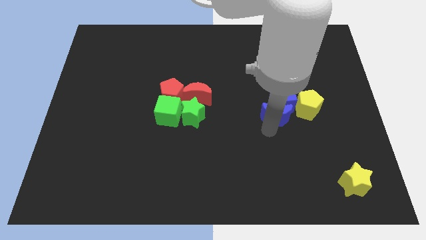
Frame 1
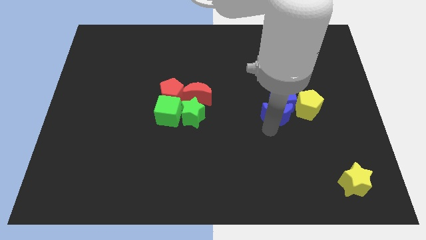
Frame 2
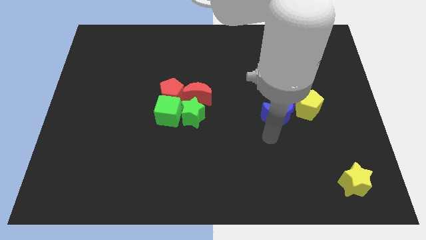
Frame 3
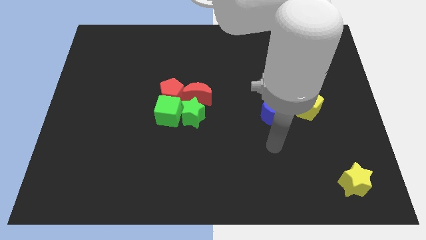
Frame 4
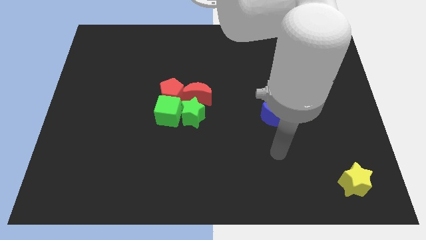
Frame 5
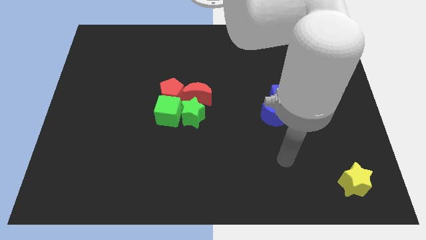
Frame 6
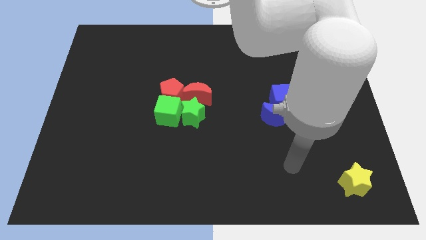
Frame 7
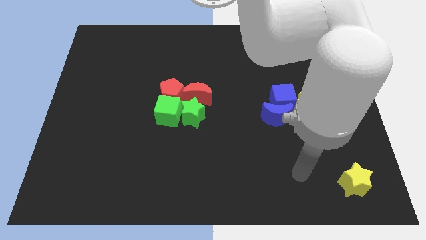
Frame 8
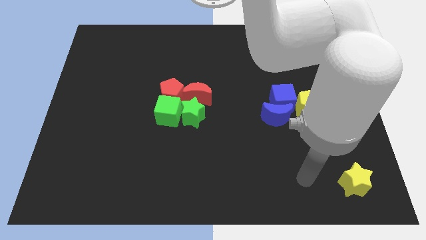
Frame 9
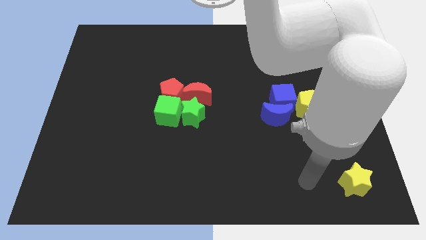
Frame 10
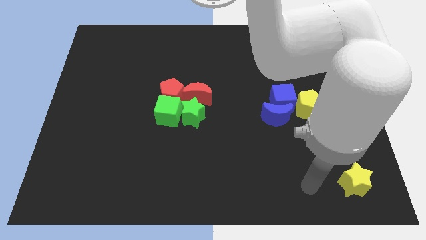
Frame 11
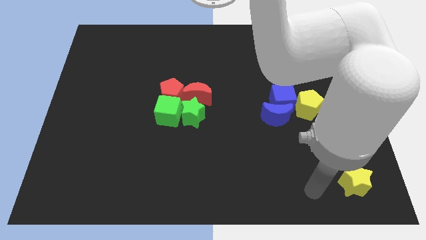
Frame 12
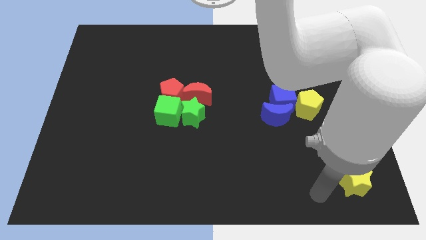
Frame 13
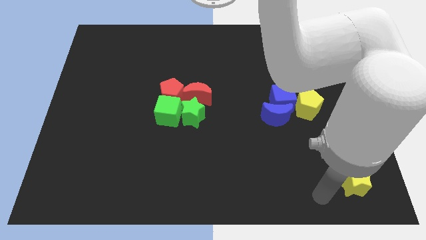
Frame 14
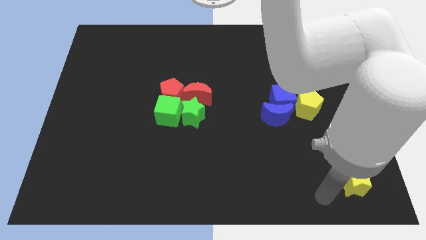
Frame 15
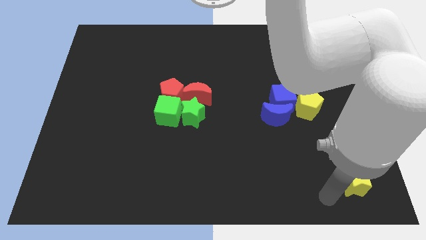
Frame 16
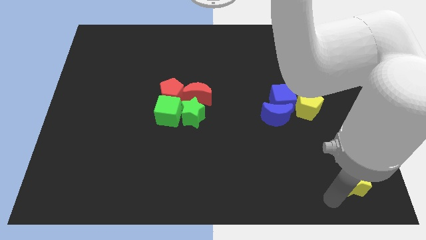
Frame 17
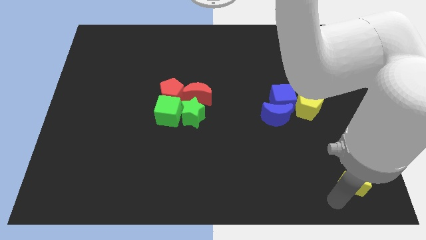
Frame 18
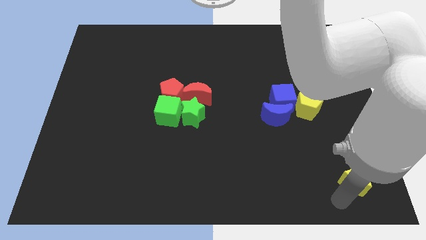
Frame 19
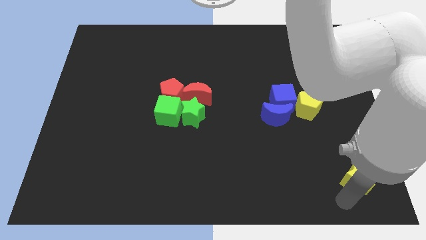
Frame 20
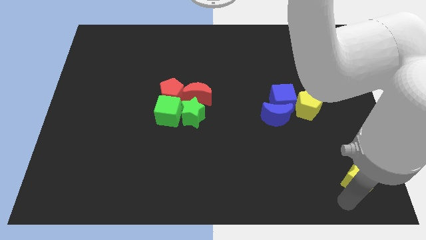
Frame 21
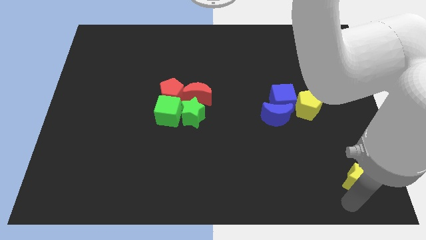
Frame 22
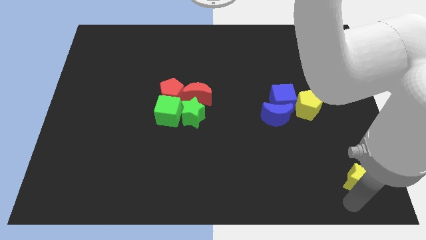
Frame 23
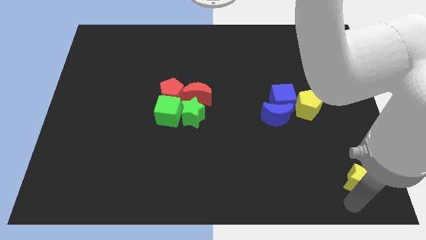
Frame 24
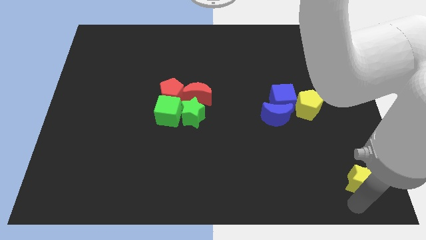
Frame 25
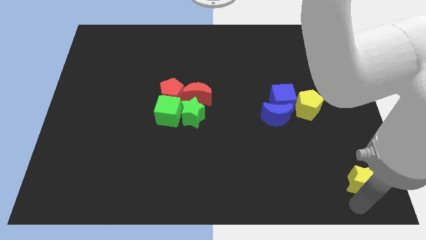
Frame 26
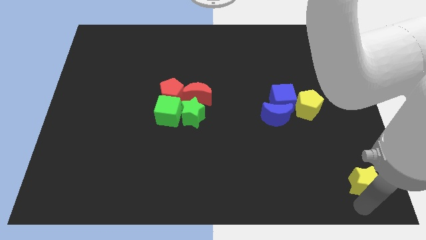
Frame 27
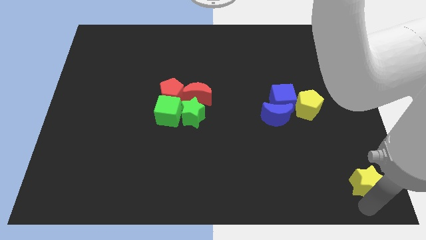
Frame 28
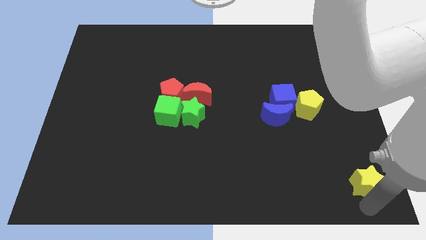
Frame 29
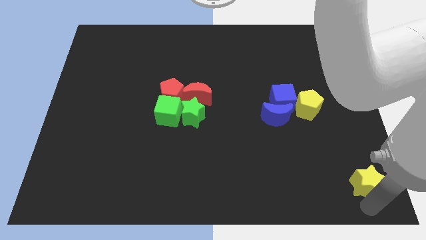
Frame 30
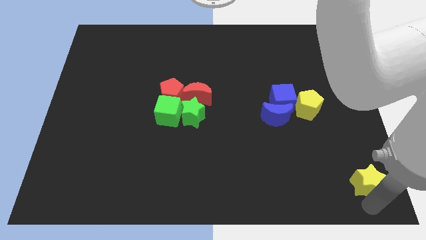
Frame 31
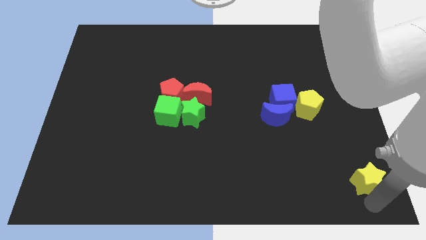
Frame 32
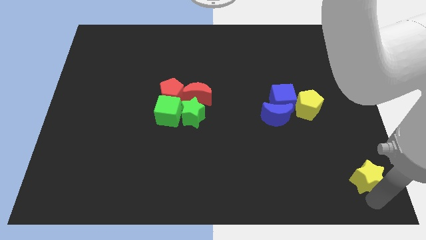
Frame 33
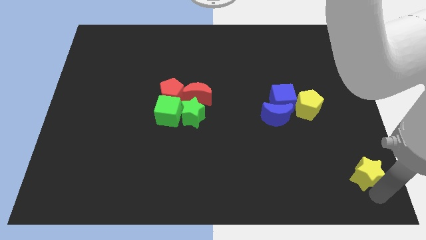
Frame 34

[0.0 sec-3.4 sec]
move your arm to the bottom right of the yellow star

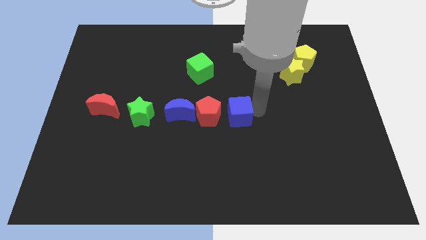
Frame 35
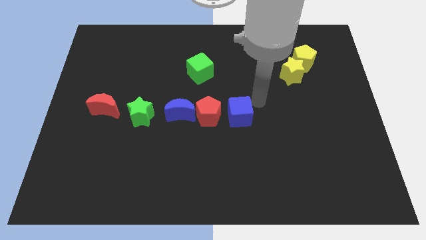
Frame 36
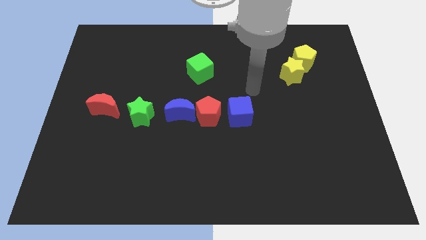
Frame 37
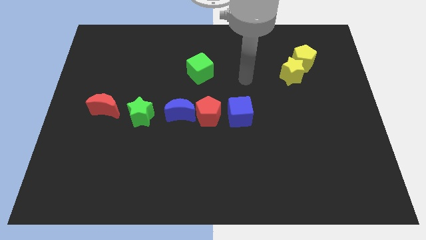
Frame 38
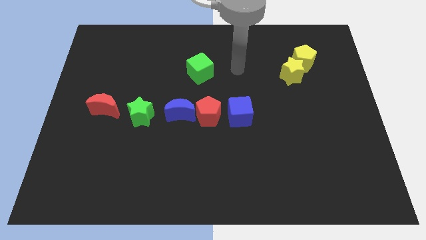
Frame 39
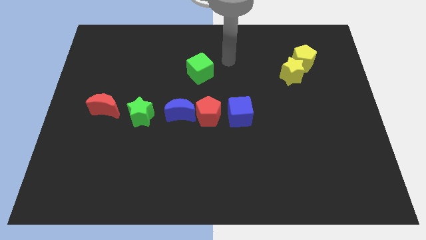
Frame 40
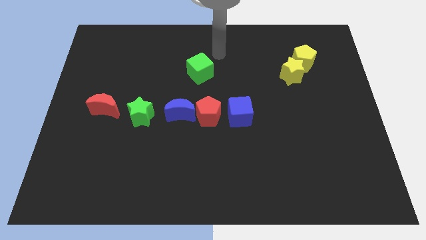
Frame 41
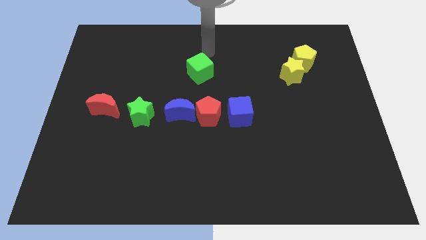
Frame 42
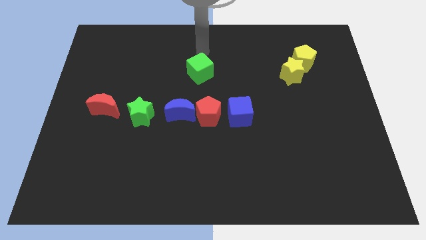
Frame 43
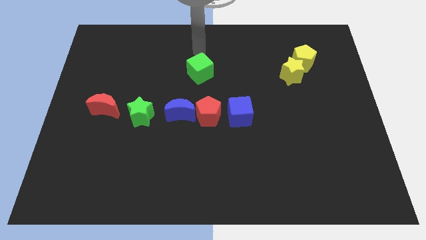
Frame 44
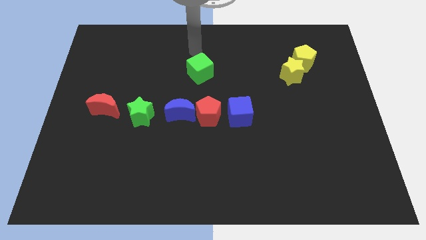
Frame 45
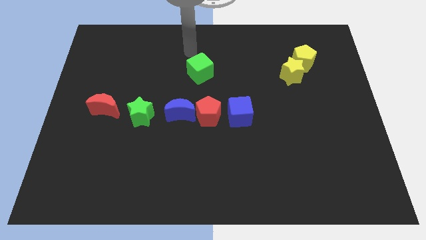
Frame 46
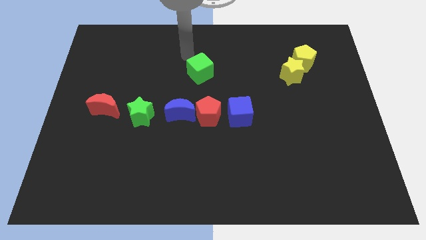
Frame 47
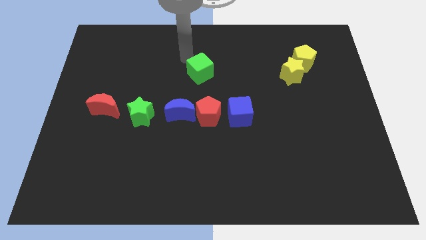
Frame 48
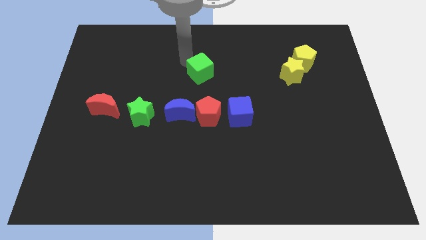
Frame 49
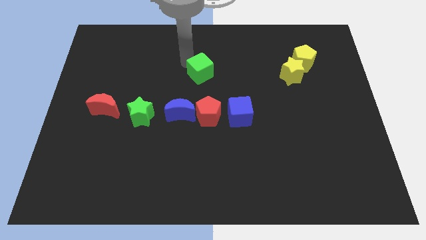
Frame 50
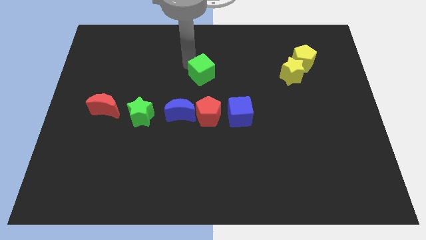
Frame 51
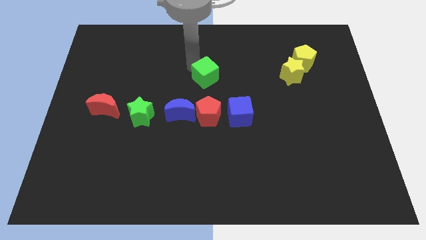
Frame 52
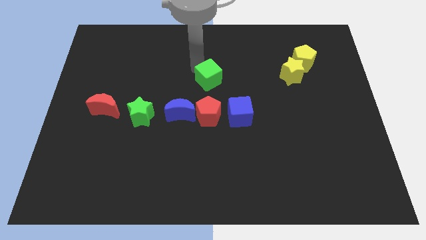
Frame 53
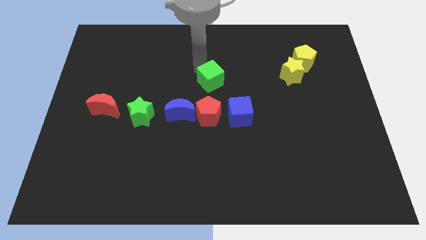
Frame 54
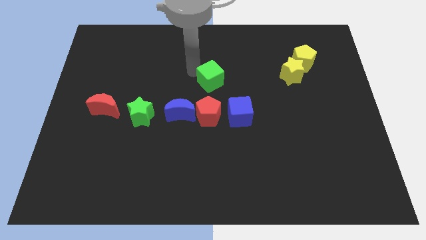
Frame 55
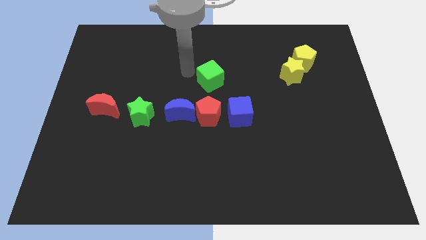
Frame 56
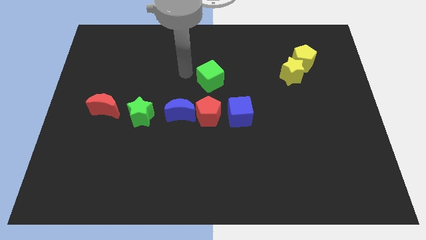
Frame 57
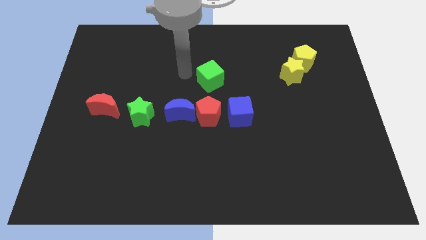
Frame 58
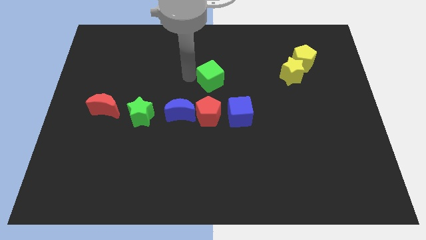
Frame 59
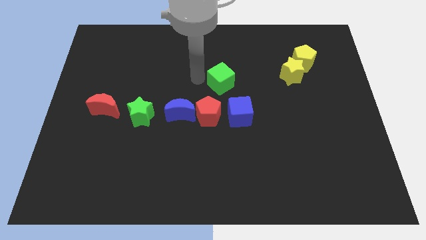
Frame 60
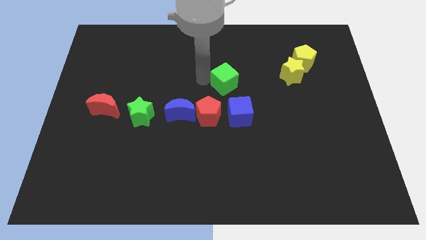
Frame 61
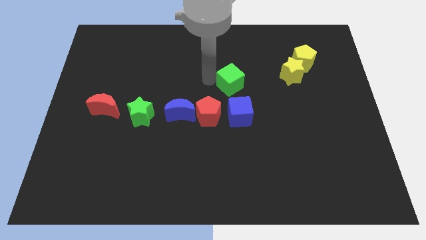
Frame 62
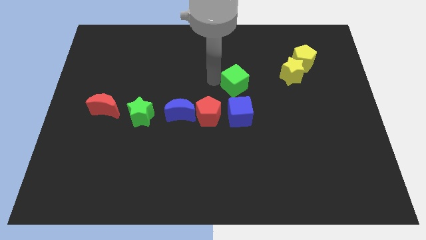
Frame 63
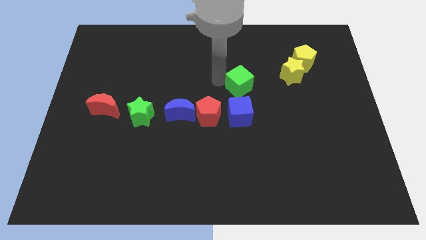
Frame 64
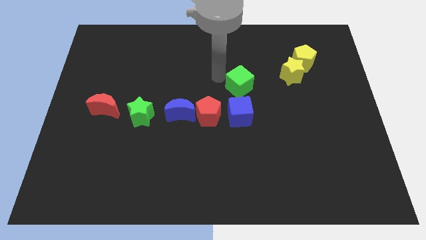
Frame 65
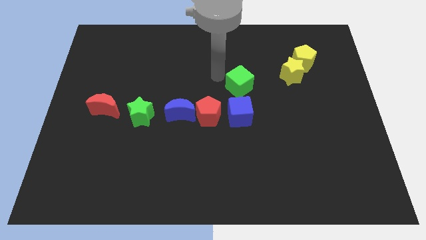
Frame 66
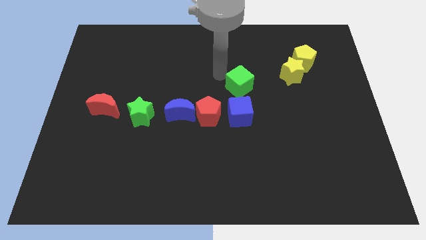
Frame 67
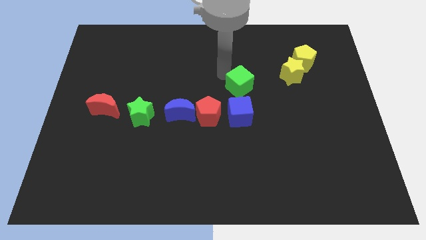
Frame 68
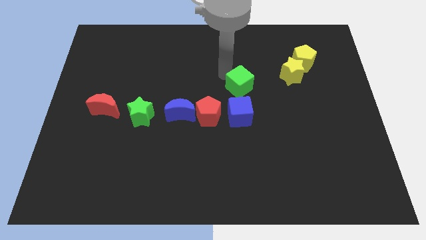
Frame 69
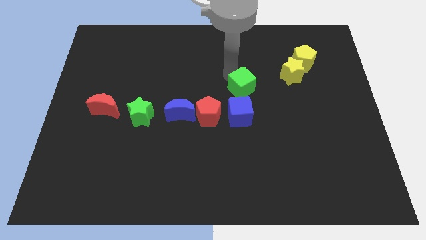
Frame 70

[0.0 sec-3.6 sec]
move the green cube to the top side of the blue cube

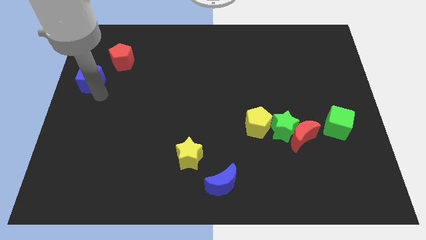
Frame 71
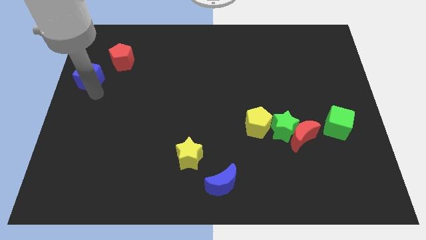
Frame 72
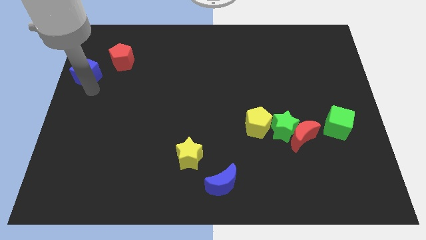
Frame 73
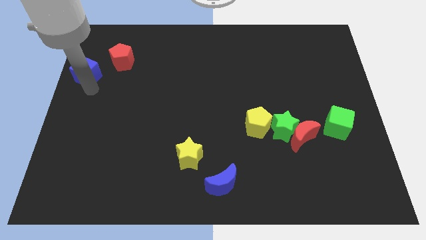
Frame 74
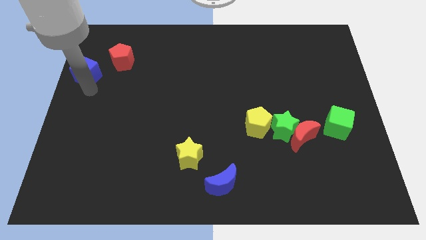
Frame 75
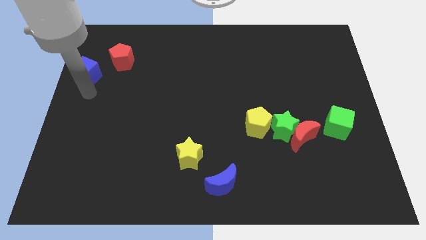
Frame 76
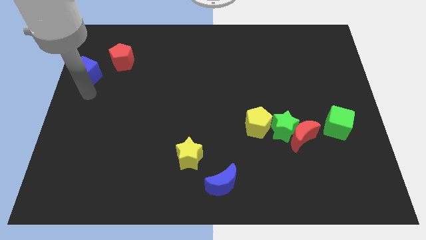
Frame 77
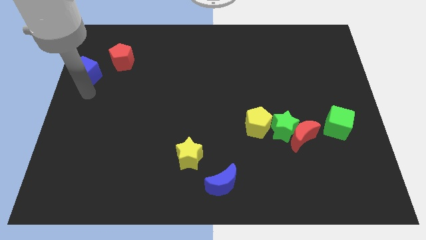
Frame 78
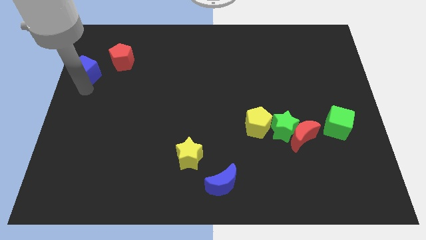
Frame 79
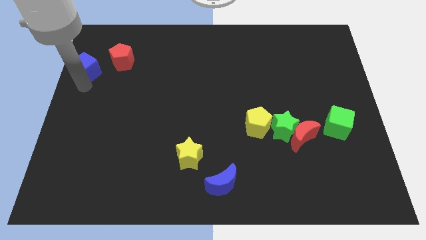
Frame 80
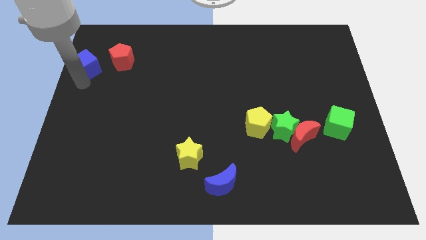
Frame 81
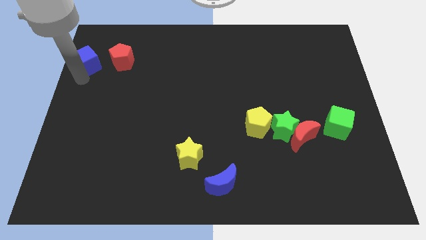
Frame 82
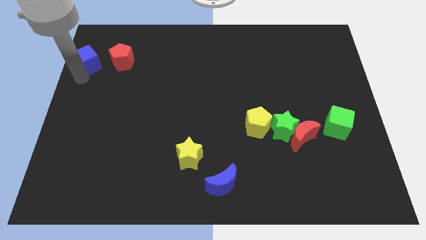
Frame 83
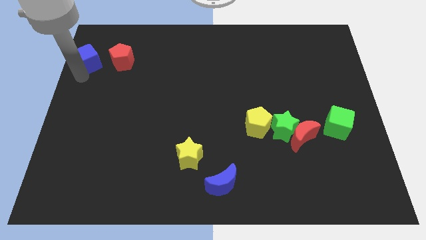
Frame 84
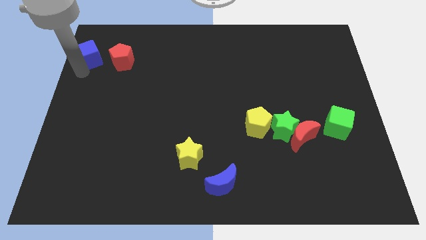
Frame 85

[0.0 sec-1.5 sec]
place blue cube beside red pentagon

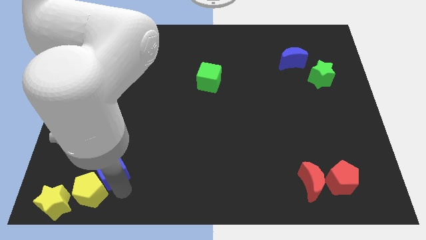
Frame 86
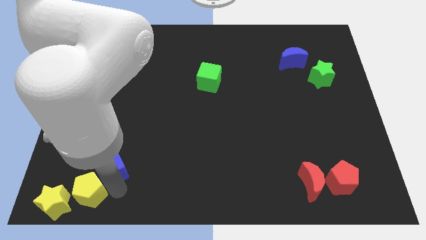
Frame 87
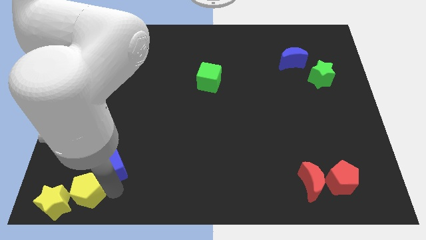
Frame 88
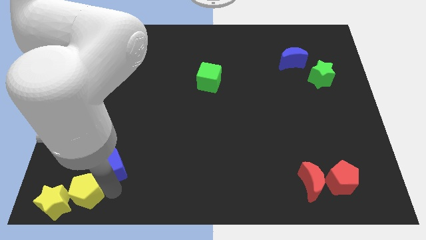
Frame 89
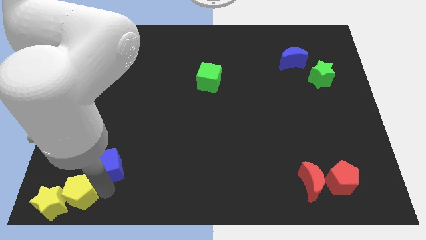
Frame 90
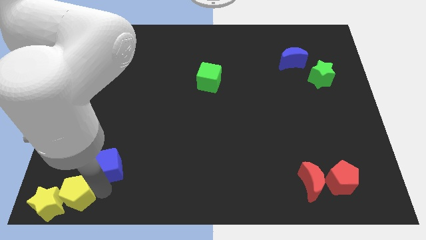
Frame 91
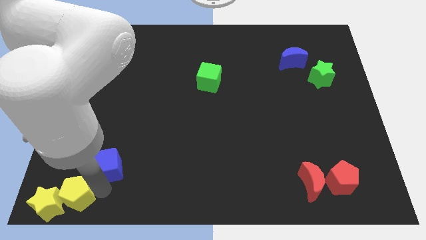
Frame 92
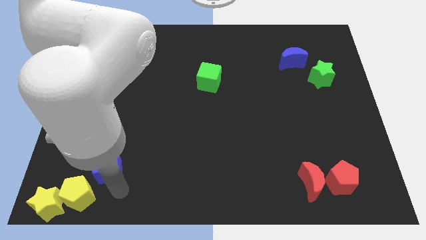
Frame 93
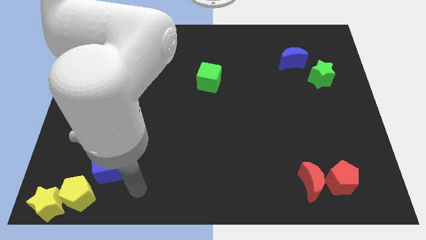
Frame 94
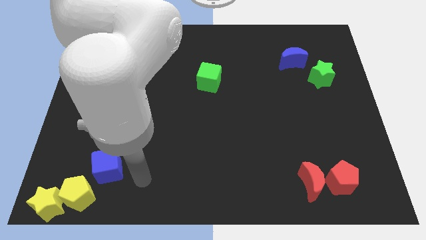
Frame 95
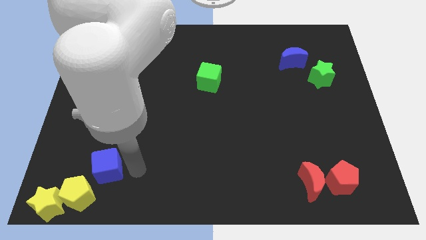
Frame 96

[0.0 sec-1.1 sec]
push yellow pentagon in to yellow star
